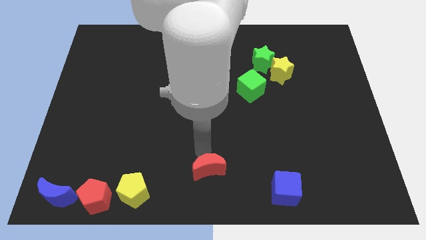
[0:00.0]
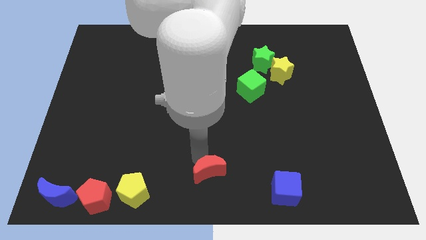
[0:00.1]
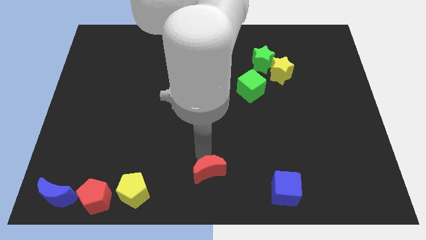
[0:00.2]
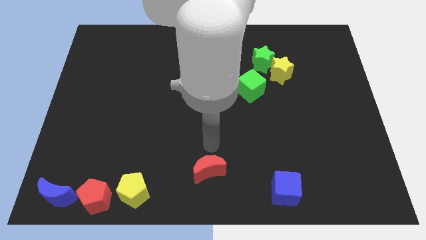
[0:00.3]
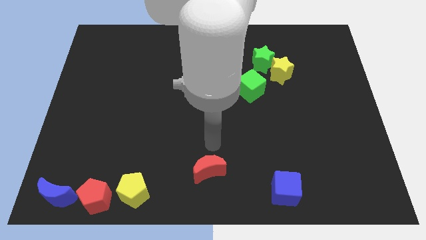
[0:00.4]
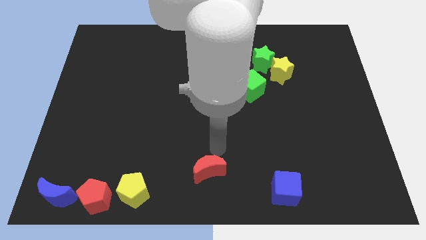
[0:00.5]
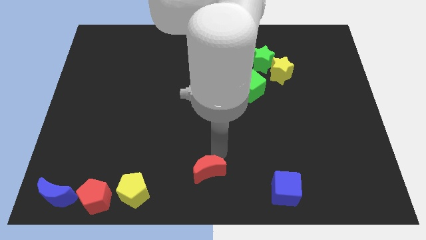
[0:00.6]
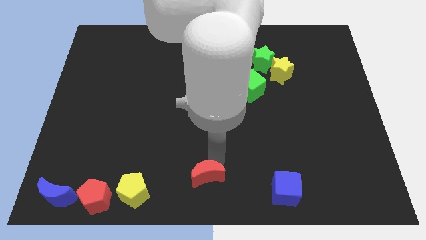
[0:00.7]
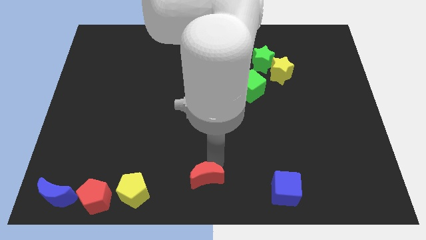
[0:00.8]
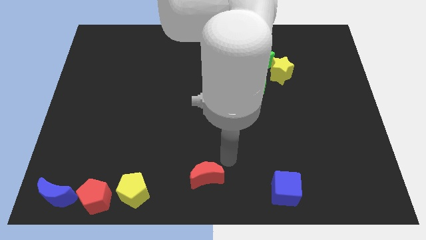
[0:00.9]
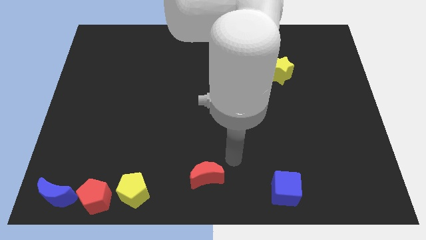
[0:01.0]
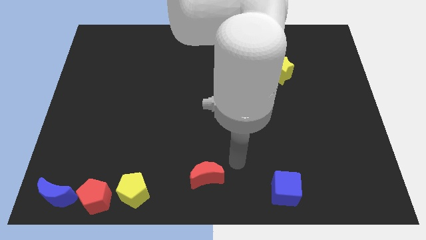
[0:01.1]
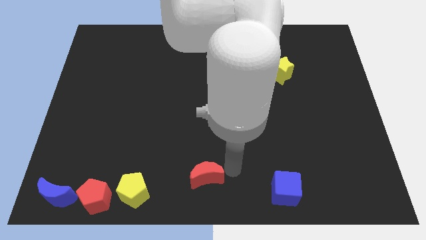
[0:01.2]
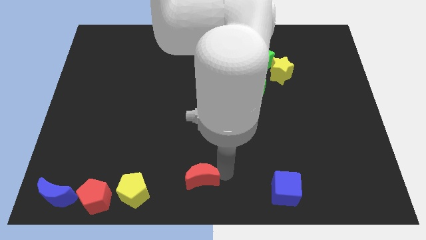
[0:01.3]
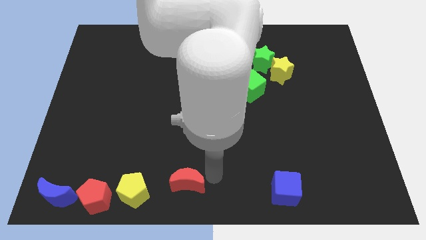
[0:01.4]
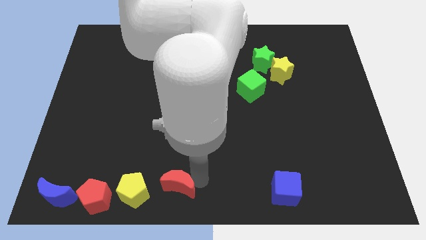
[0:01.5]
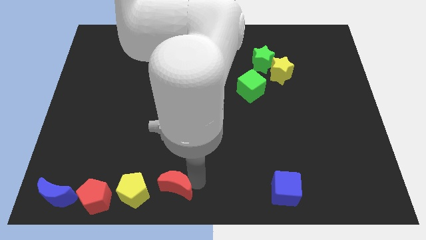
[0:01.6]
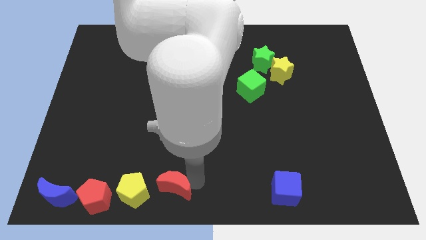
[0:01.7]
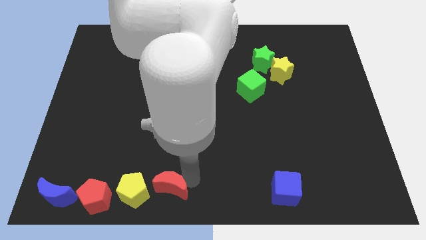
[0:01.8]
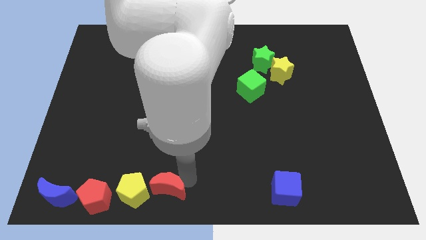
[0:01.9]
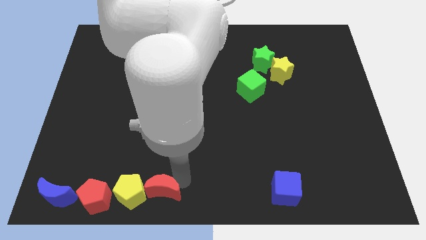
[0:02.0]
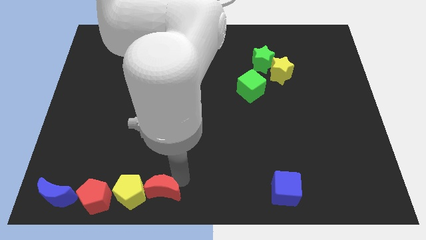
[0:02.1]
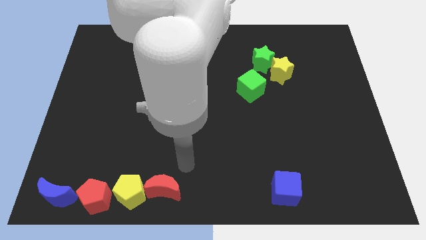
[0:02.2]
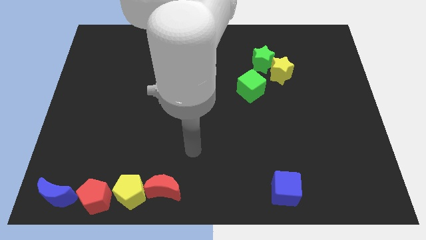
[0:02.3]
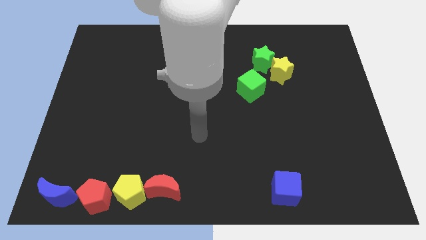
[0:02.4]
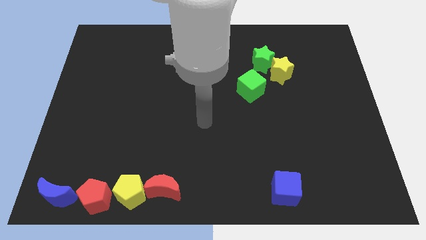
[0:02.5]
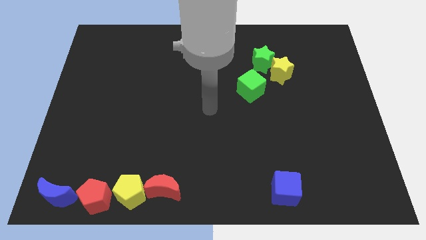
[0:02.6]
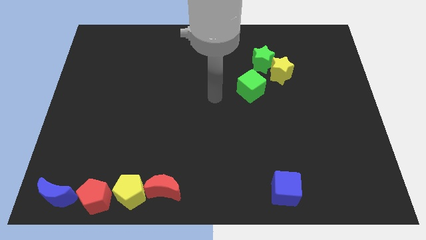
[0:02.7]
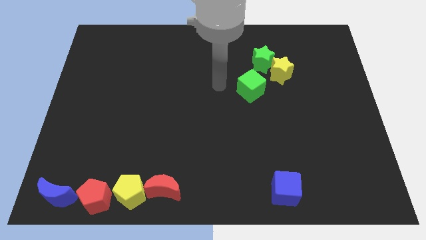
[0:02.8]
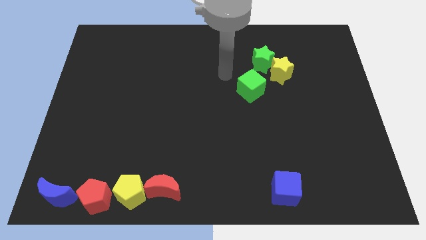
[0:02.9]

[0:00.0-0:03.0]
push red crescent in to yellow pentagon

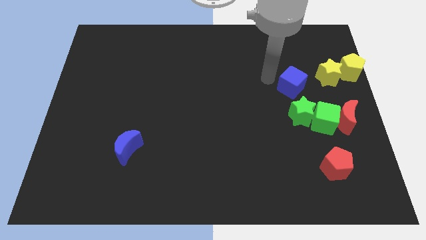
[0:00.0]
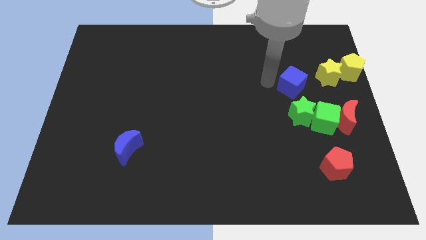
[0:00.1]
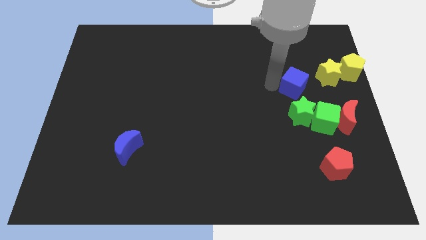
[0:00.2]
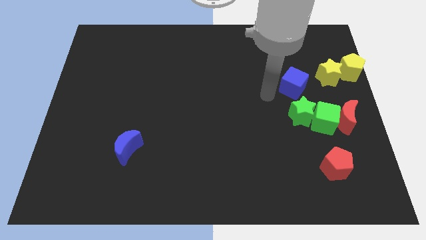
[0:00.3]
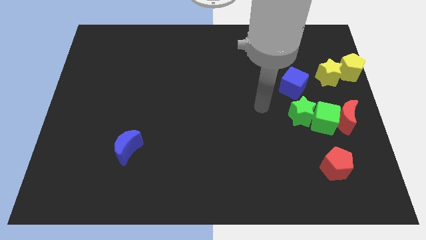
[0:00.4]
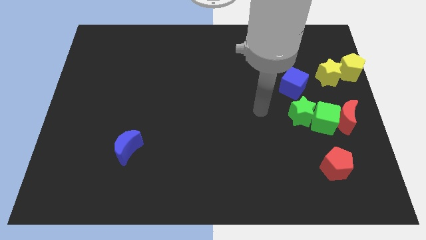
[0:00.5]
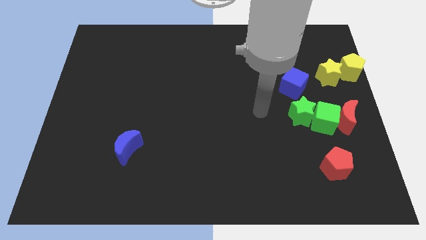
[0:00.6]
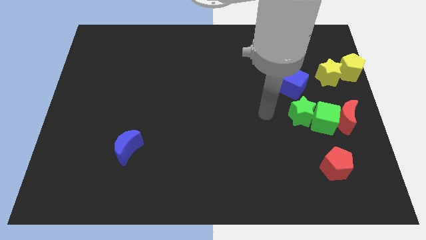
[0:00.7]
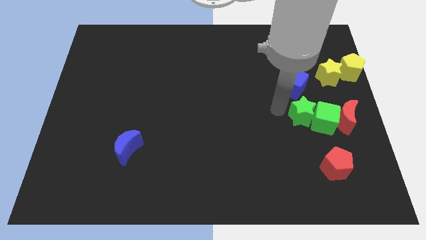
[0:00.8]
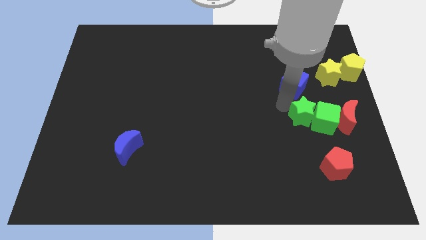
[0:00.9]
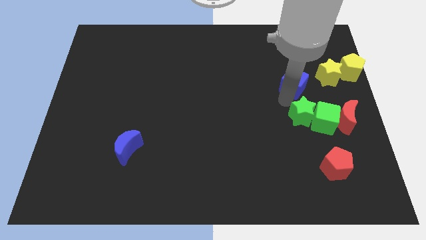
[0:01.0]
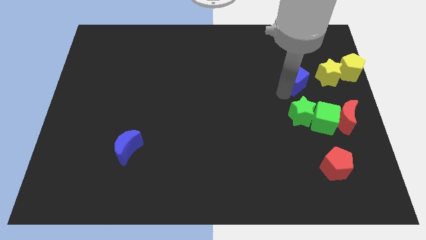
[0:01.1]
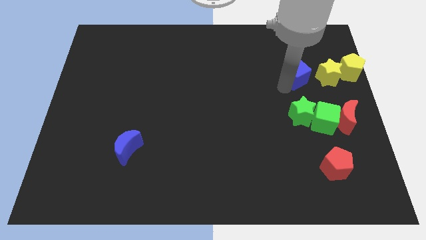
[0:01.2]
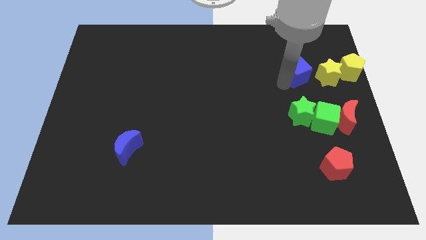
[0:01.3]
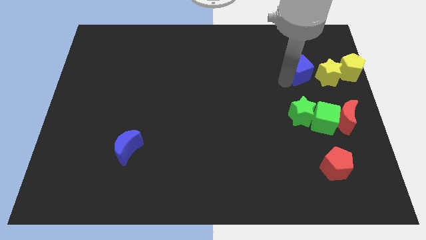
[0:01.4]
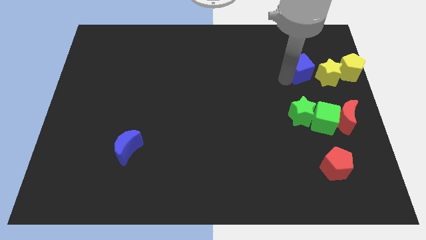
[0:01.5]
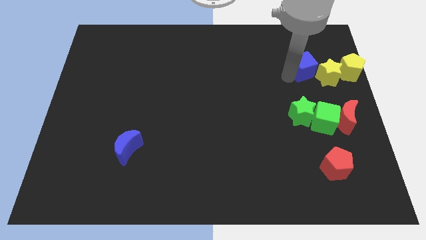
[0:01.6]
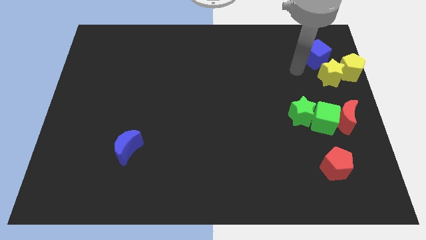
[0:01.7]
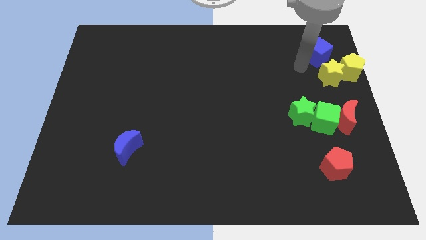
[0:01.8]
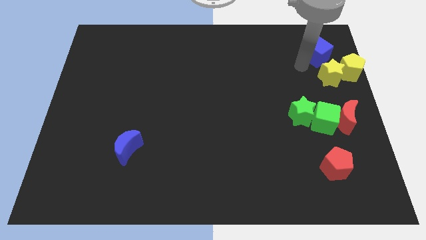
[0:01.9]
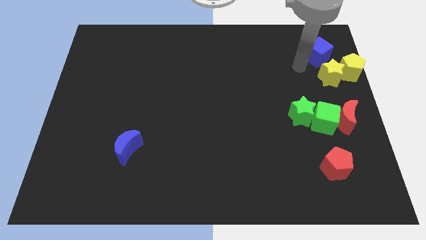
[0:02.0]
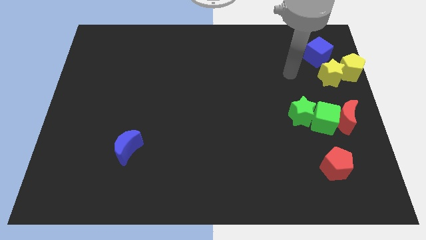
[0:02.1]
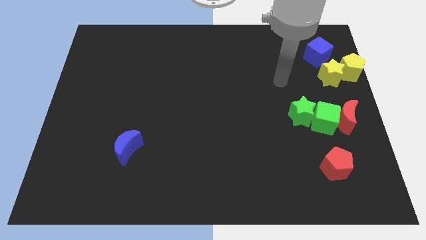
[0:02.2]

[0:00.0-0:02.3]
drag the blue cube to the top left of yellow star

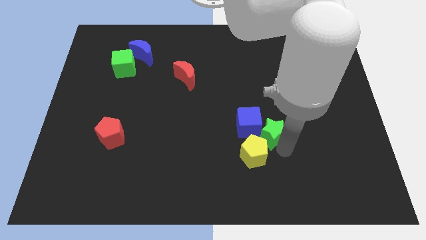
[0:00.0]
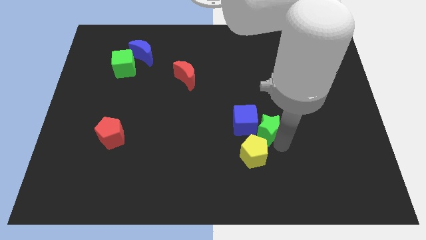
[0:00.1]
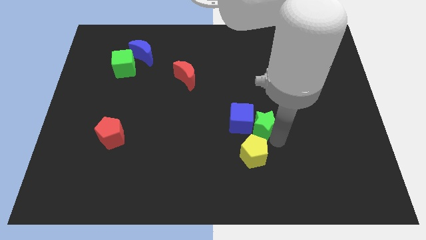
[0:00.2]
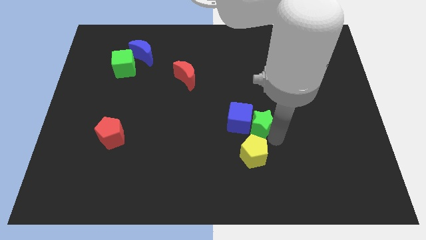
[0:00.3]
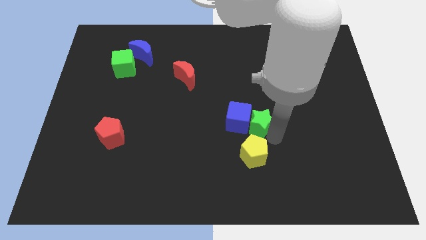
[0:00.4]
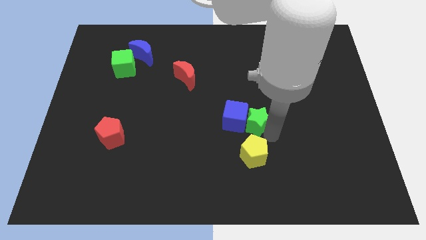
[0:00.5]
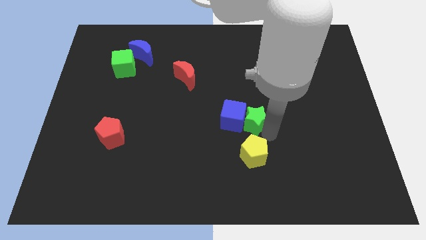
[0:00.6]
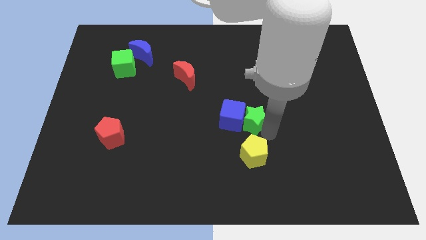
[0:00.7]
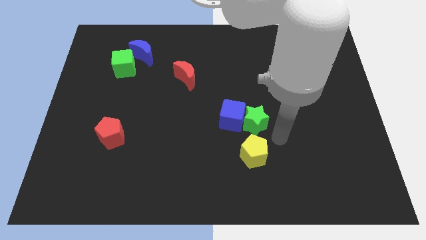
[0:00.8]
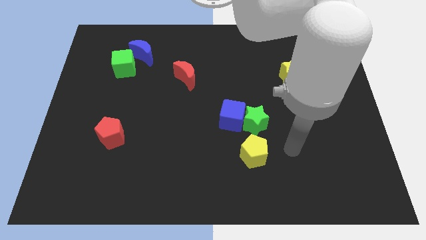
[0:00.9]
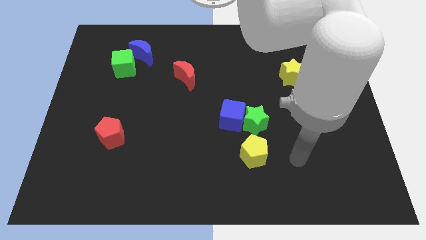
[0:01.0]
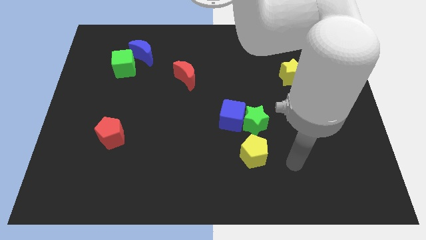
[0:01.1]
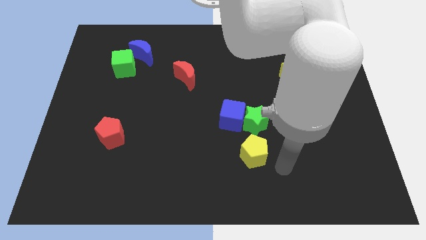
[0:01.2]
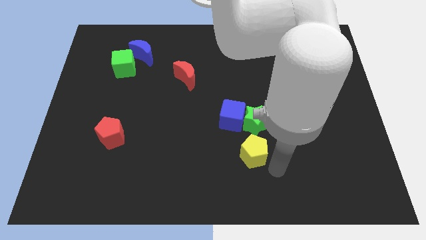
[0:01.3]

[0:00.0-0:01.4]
move the green star along with blue cube to the center of the board

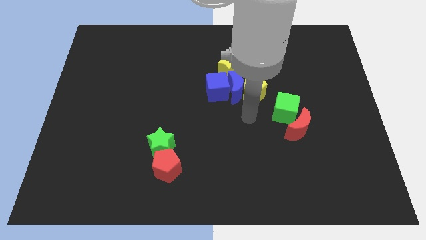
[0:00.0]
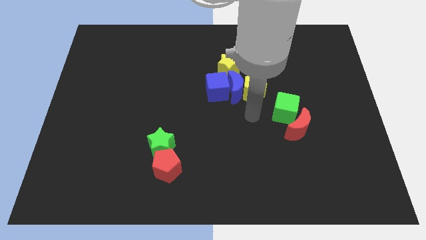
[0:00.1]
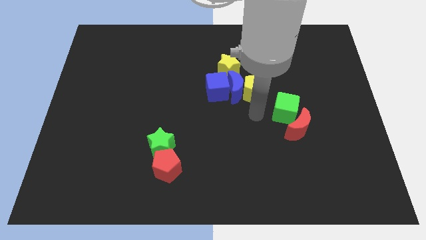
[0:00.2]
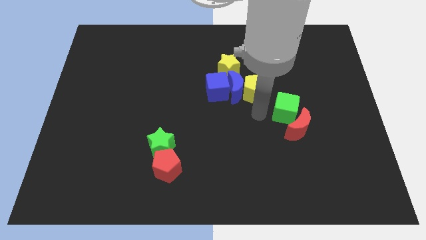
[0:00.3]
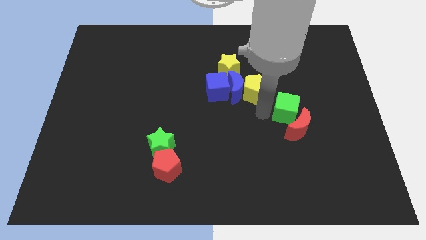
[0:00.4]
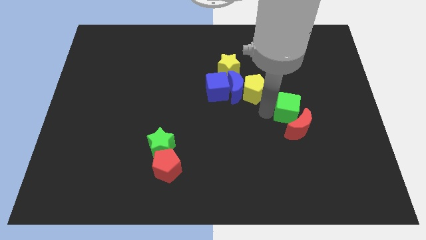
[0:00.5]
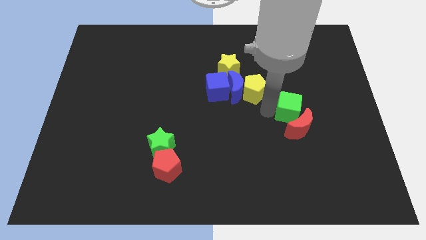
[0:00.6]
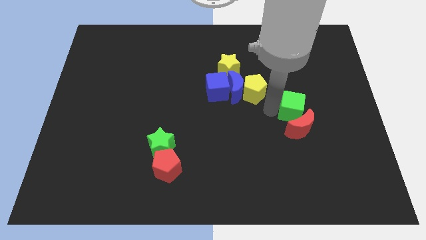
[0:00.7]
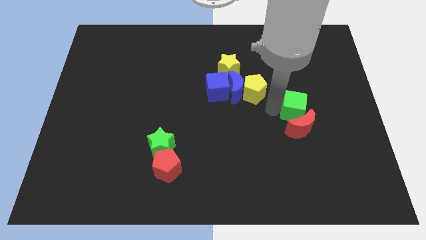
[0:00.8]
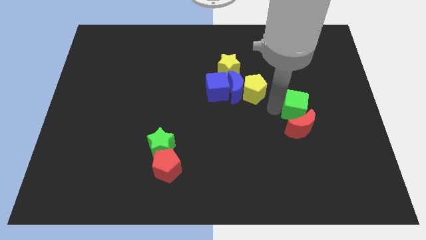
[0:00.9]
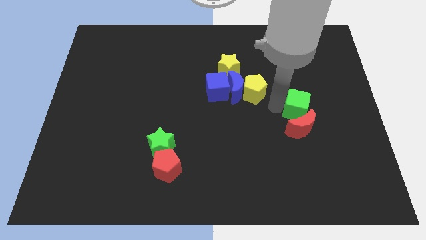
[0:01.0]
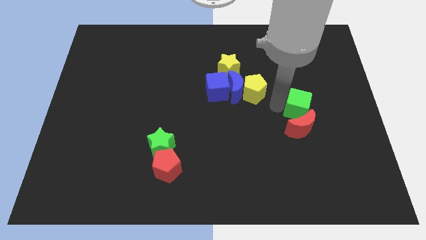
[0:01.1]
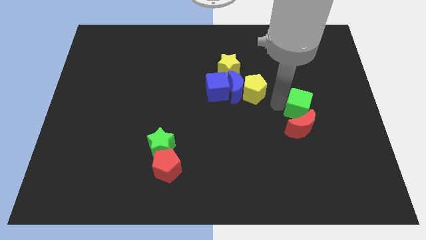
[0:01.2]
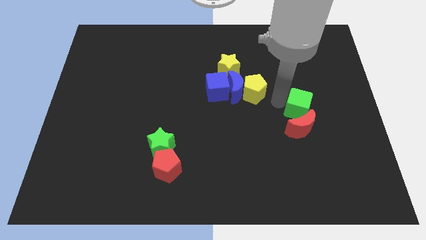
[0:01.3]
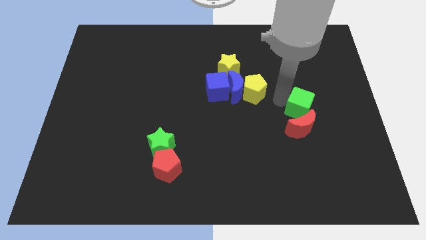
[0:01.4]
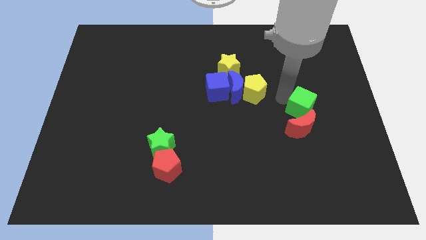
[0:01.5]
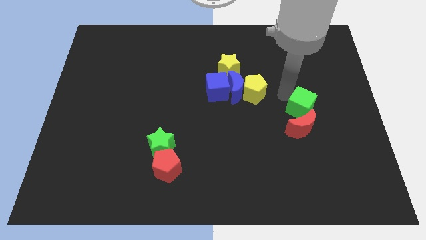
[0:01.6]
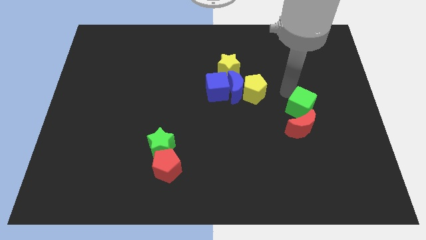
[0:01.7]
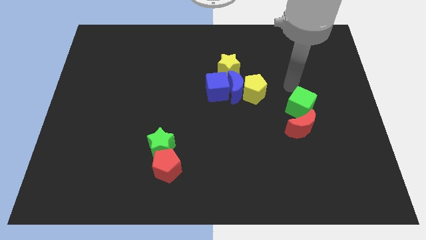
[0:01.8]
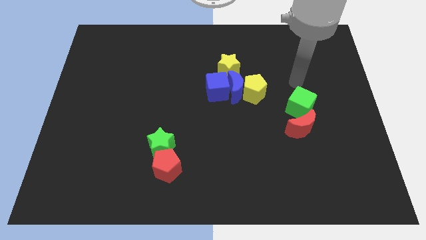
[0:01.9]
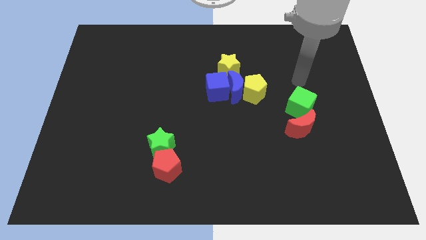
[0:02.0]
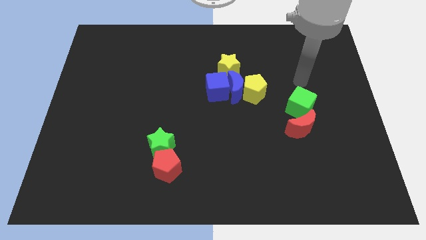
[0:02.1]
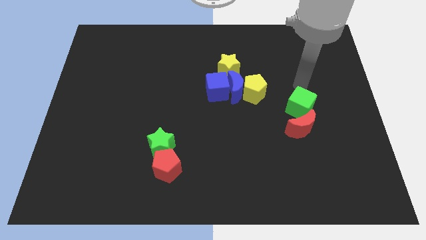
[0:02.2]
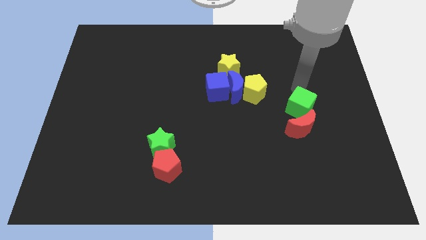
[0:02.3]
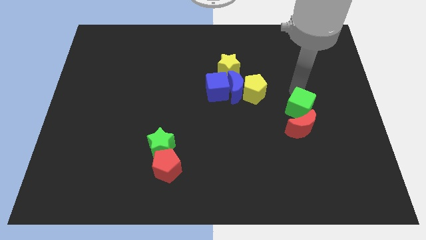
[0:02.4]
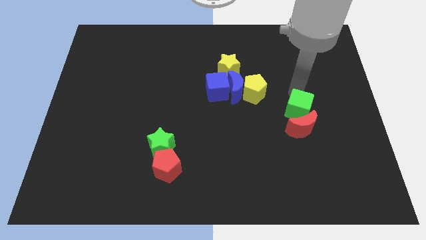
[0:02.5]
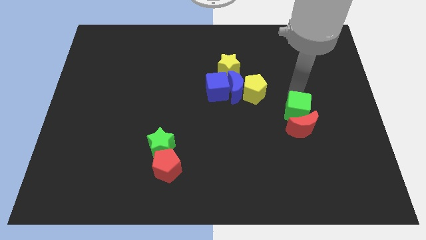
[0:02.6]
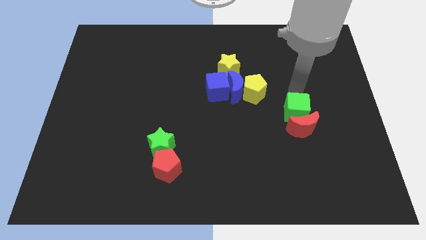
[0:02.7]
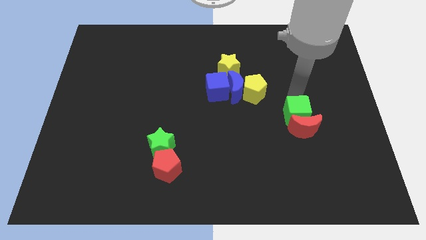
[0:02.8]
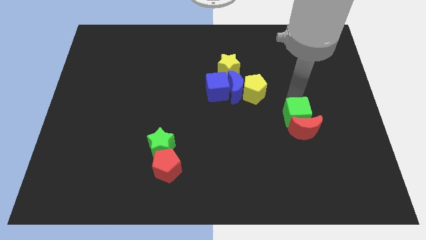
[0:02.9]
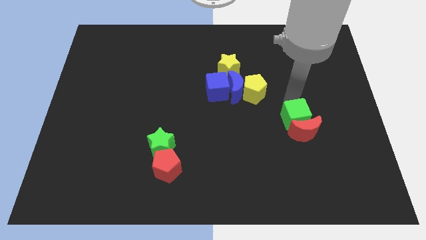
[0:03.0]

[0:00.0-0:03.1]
push the green cube into the red moon
